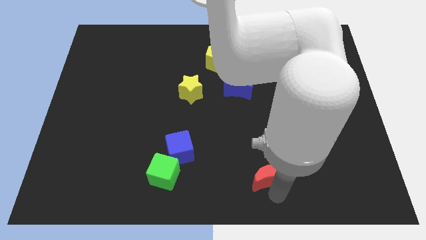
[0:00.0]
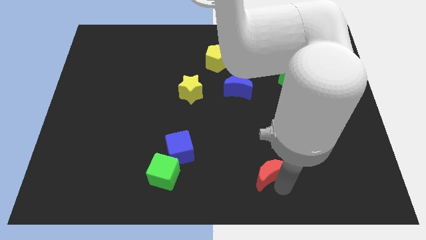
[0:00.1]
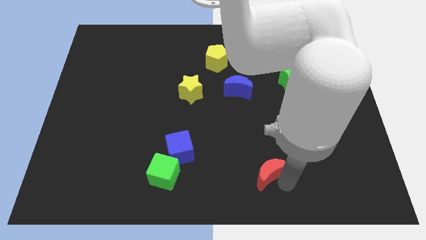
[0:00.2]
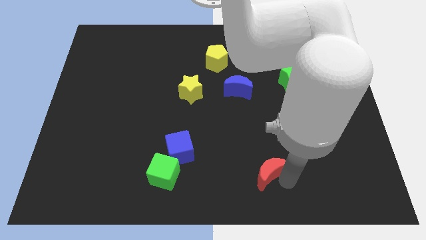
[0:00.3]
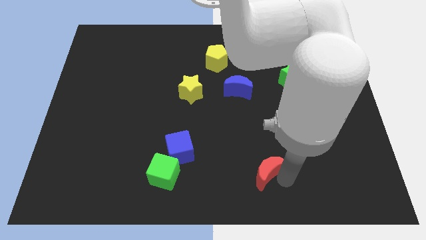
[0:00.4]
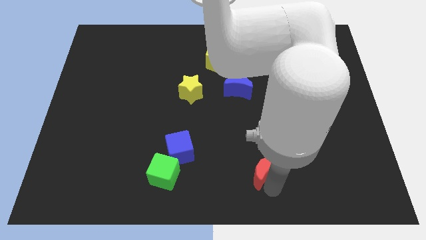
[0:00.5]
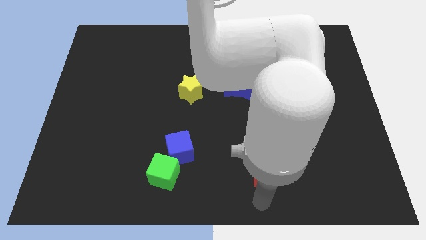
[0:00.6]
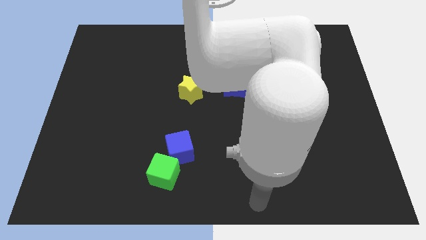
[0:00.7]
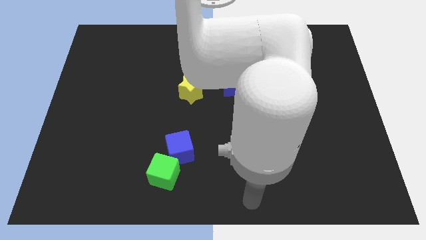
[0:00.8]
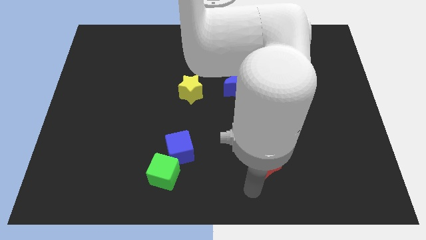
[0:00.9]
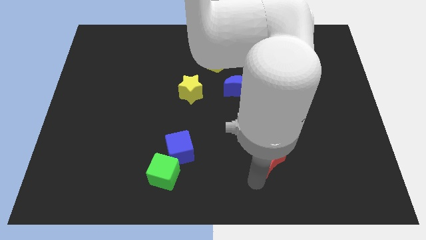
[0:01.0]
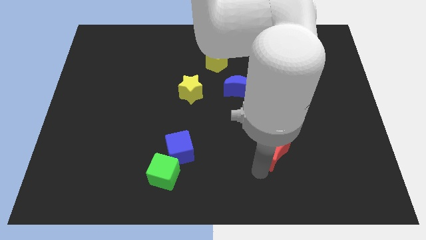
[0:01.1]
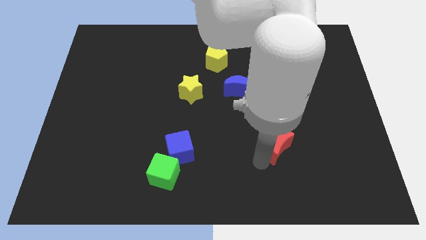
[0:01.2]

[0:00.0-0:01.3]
place the red moon right to the blue cube

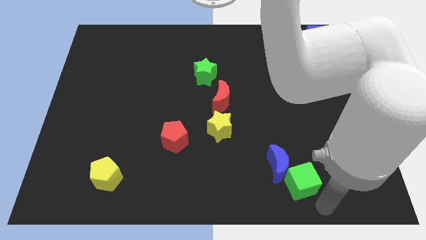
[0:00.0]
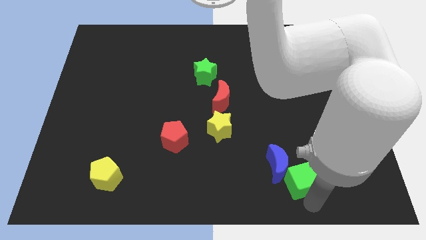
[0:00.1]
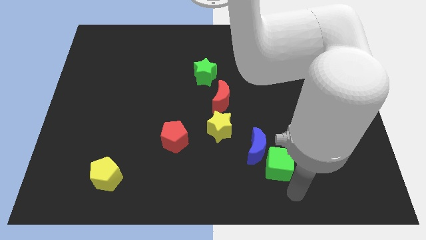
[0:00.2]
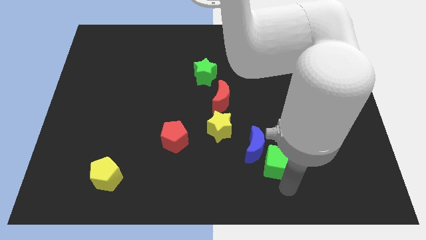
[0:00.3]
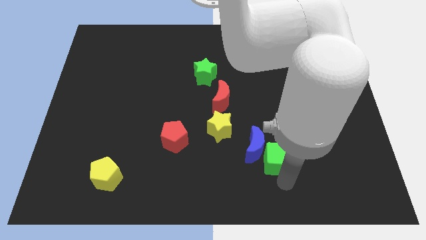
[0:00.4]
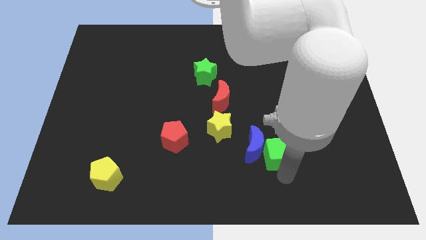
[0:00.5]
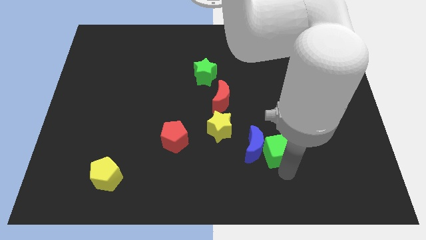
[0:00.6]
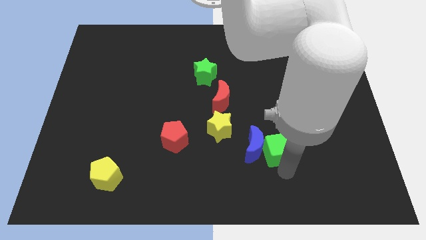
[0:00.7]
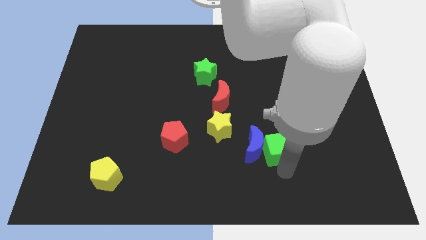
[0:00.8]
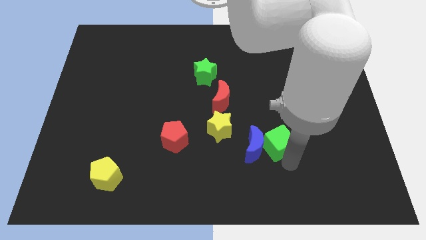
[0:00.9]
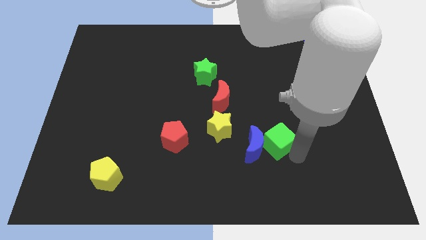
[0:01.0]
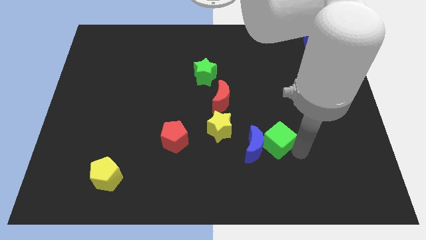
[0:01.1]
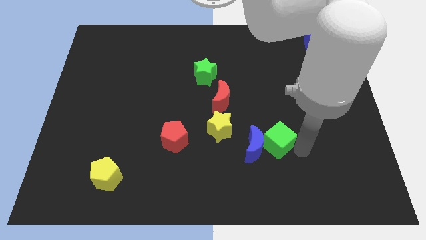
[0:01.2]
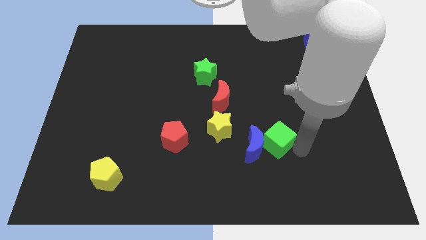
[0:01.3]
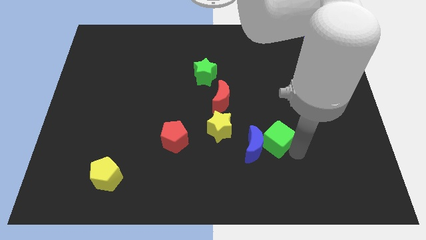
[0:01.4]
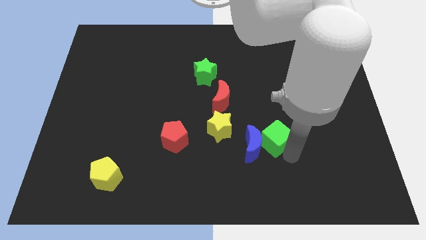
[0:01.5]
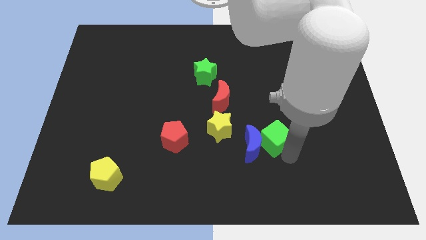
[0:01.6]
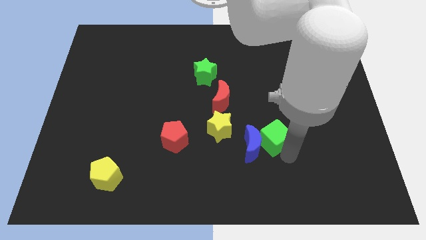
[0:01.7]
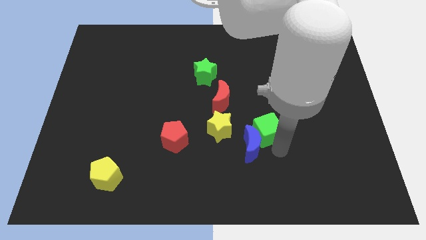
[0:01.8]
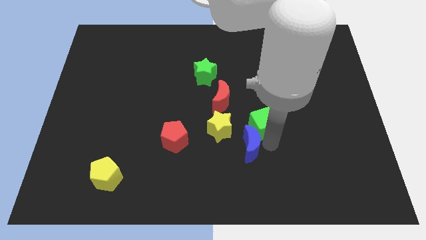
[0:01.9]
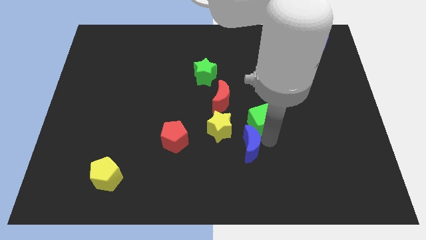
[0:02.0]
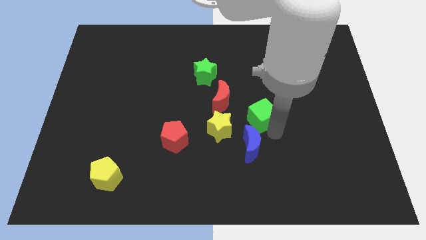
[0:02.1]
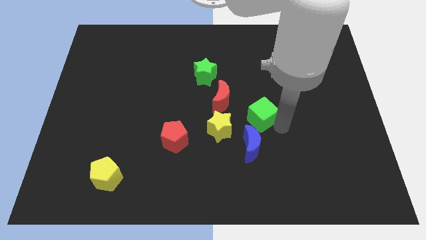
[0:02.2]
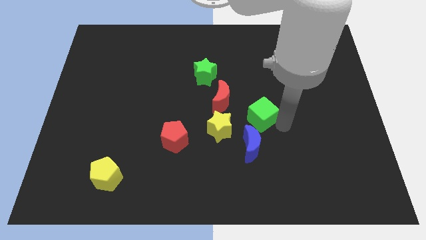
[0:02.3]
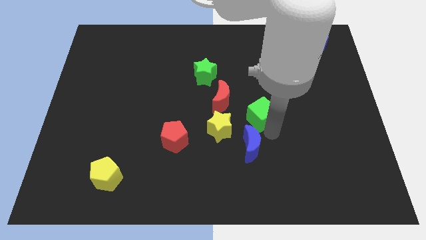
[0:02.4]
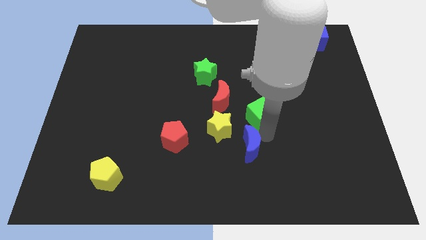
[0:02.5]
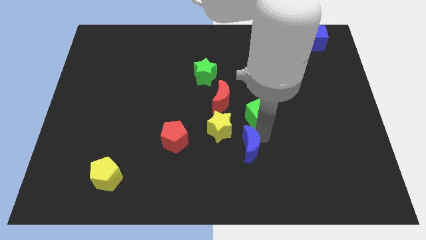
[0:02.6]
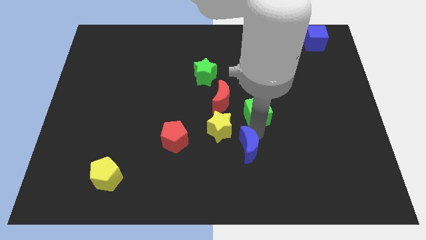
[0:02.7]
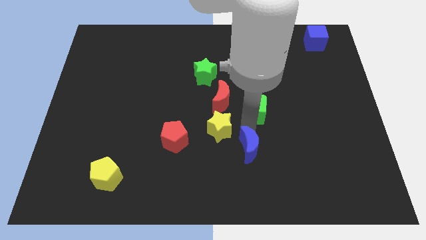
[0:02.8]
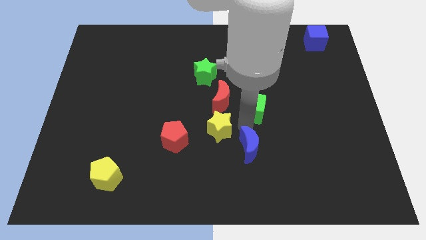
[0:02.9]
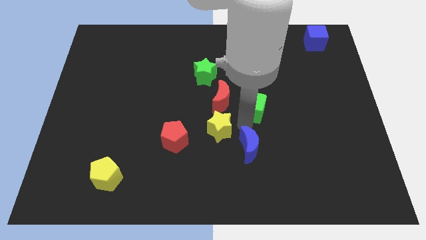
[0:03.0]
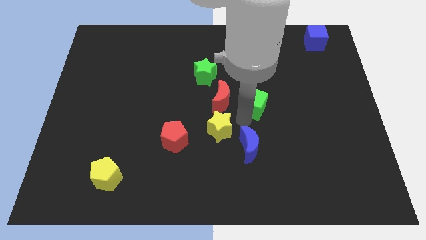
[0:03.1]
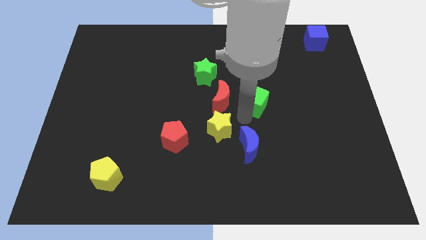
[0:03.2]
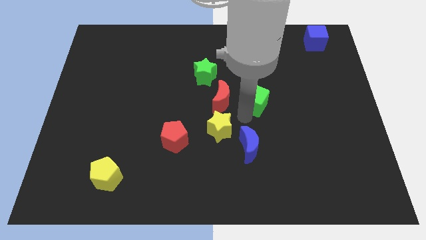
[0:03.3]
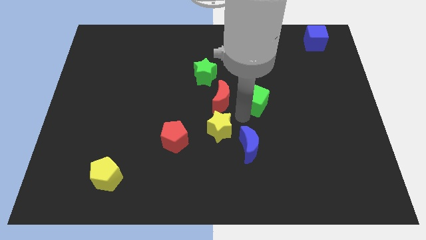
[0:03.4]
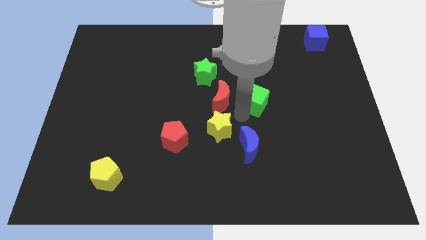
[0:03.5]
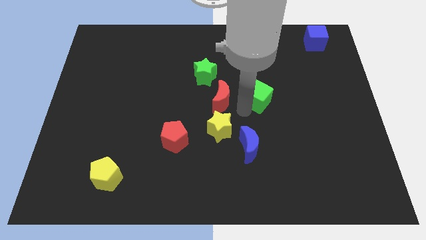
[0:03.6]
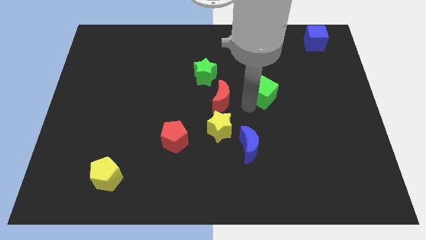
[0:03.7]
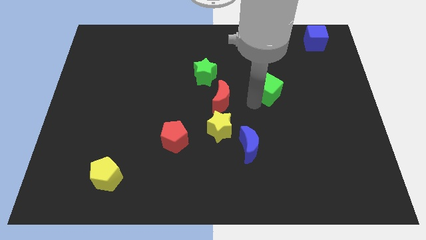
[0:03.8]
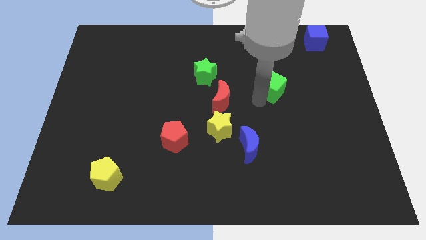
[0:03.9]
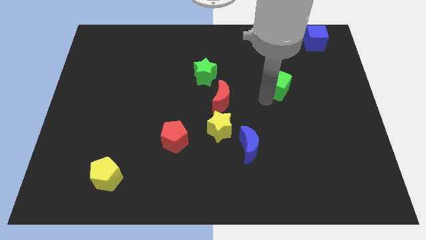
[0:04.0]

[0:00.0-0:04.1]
move the green cube to the right of the red crescent

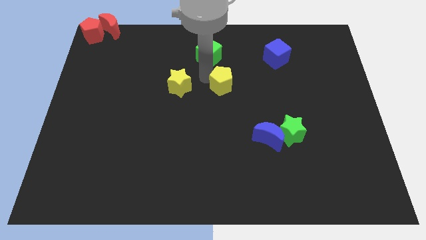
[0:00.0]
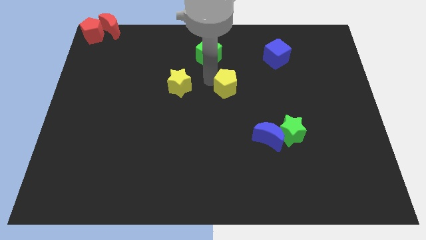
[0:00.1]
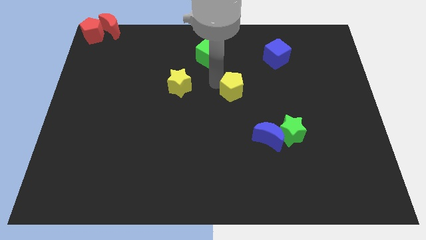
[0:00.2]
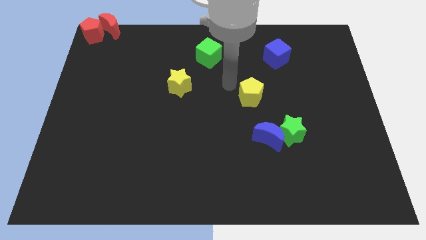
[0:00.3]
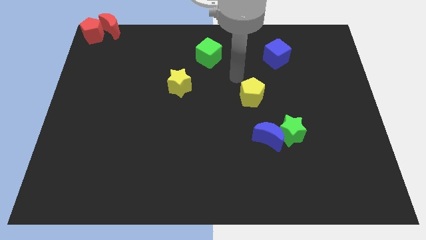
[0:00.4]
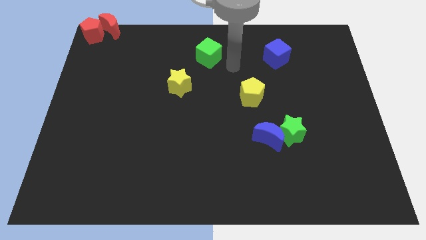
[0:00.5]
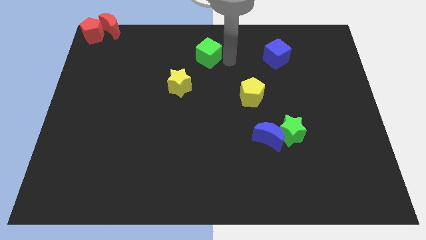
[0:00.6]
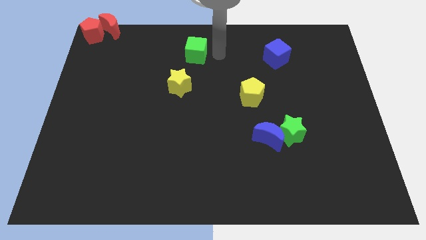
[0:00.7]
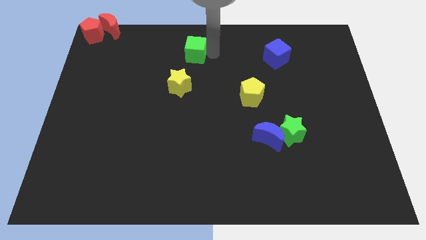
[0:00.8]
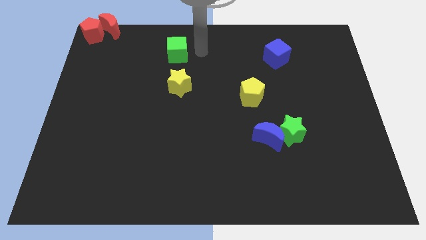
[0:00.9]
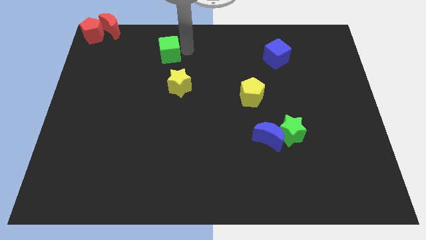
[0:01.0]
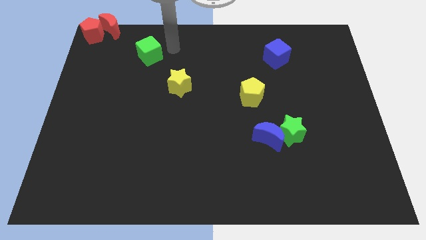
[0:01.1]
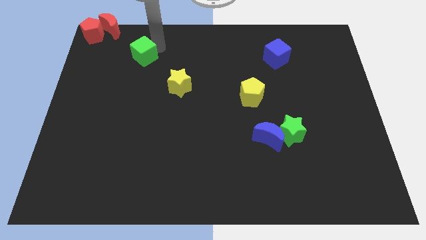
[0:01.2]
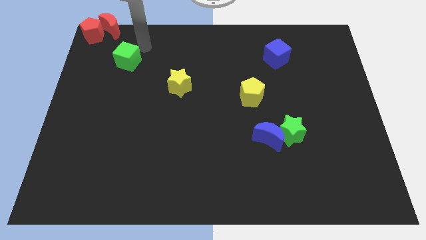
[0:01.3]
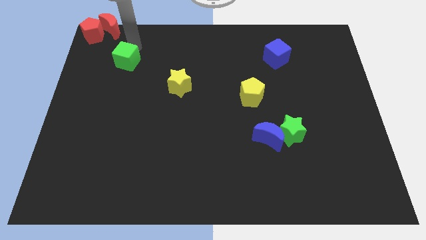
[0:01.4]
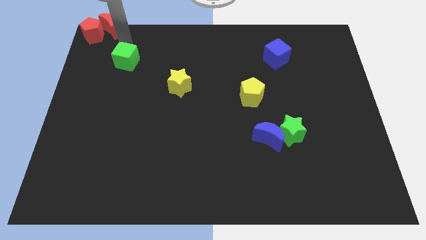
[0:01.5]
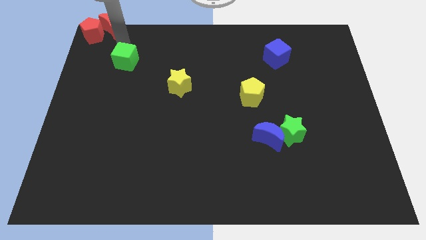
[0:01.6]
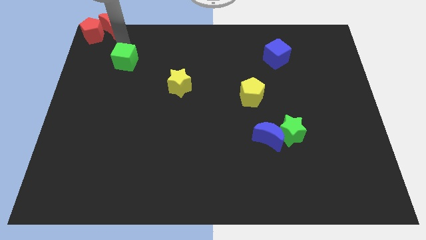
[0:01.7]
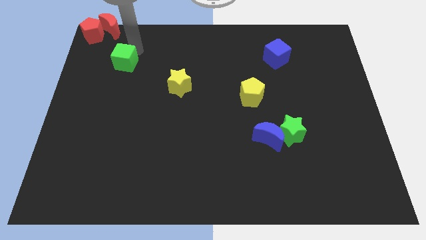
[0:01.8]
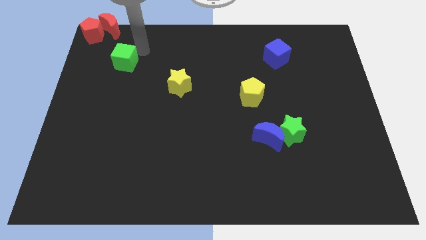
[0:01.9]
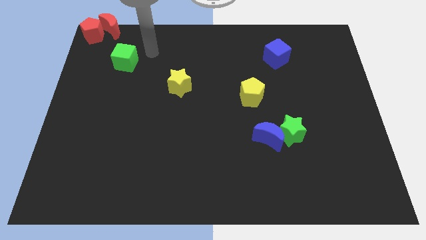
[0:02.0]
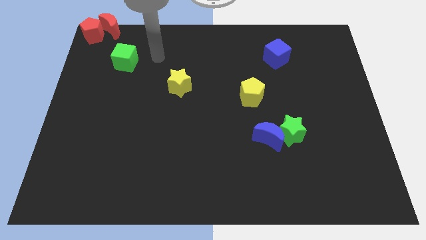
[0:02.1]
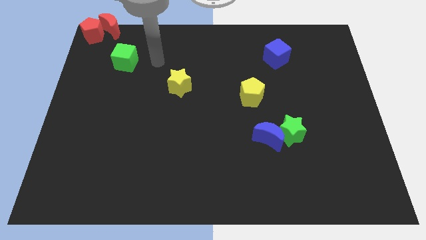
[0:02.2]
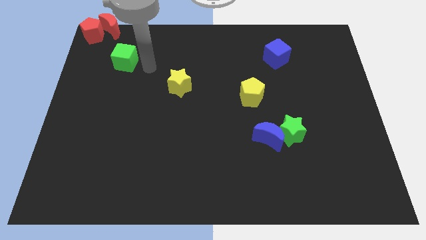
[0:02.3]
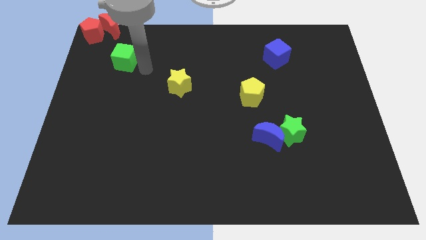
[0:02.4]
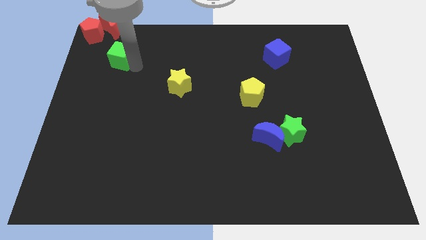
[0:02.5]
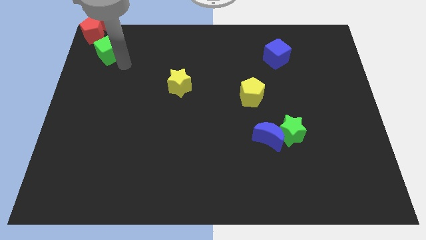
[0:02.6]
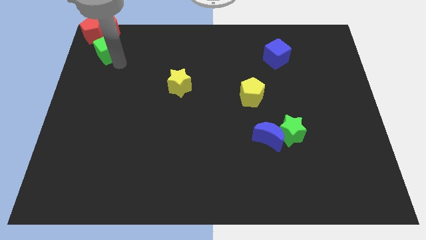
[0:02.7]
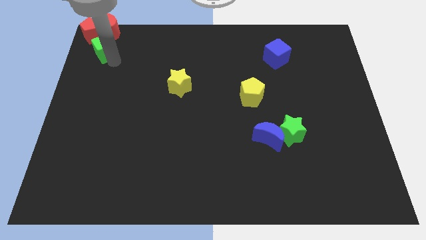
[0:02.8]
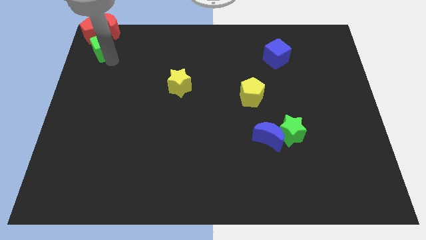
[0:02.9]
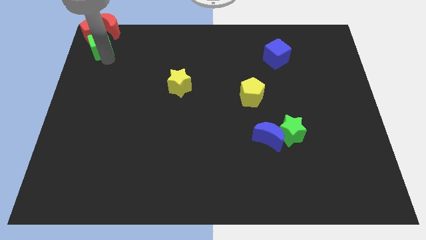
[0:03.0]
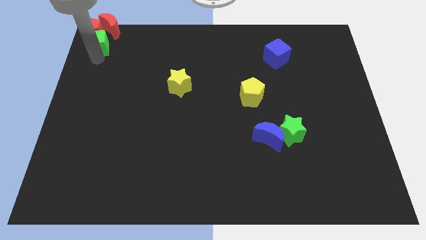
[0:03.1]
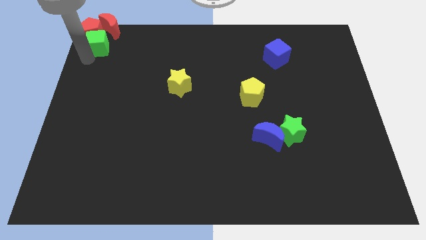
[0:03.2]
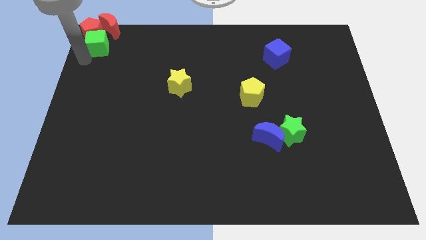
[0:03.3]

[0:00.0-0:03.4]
place green cube to the bottom of red moon

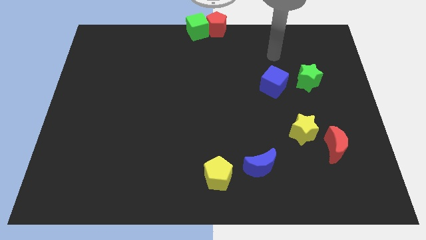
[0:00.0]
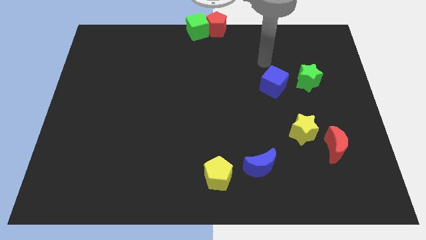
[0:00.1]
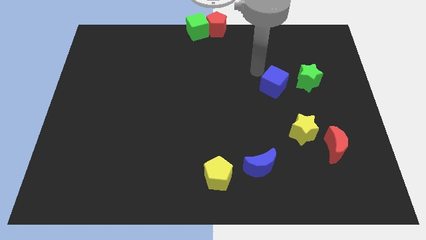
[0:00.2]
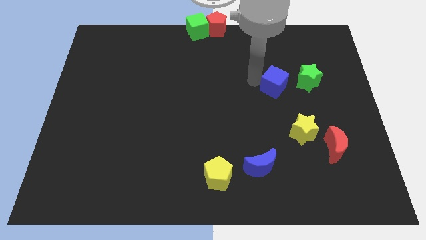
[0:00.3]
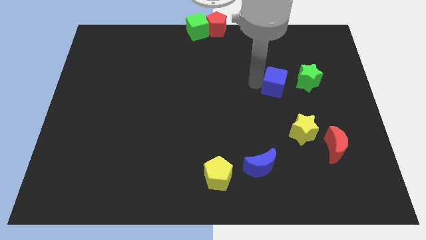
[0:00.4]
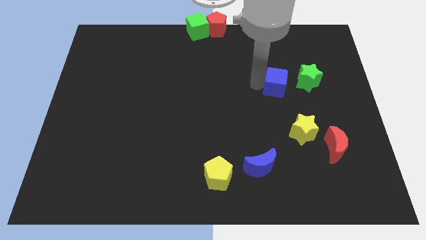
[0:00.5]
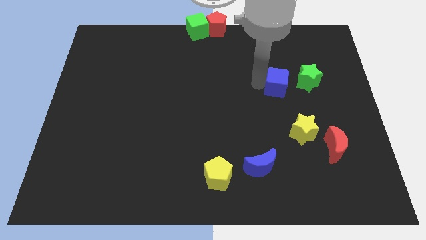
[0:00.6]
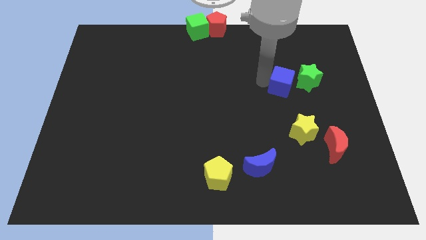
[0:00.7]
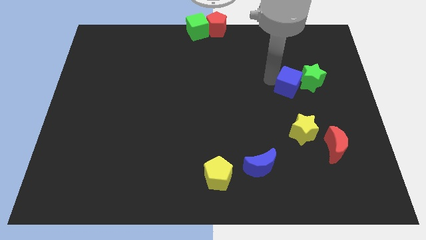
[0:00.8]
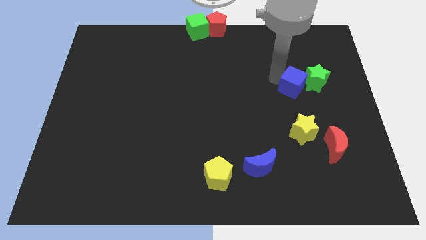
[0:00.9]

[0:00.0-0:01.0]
push the blue cube into the green star
